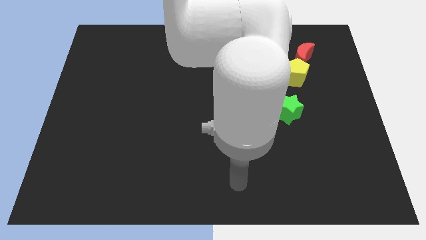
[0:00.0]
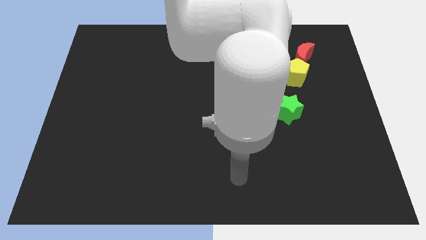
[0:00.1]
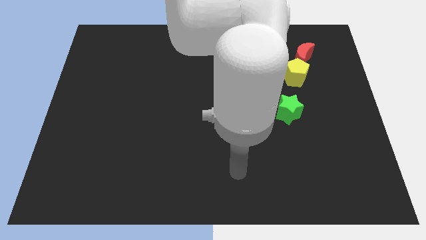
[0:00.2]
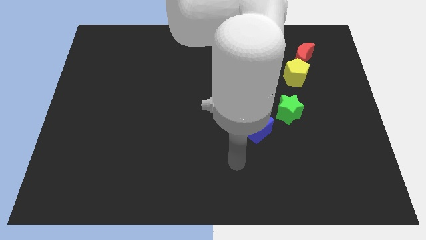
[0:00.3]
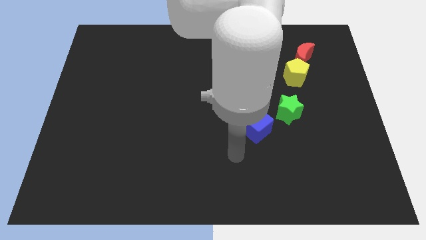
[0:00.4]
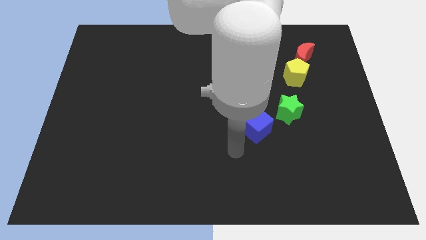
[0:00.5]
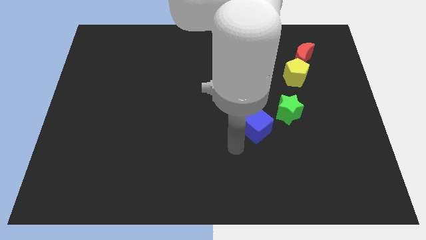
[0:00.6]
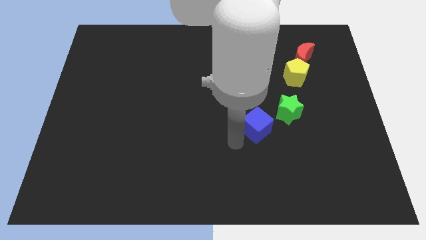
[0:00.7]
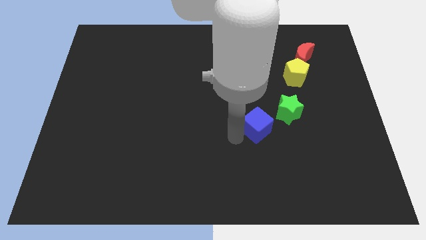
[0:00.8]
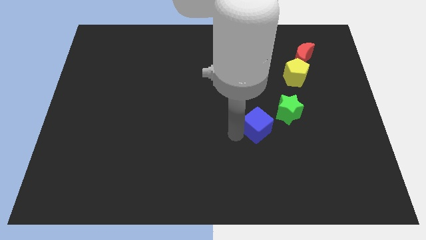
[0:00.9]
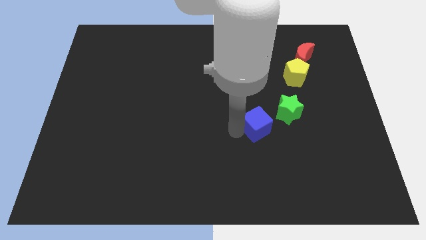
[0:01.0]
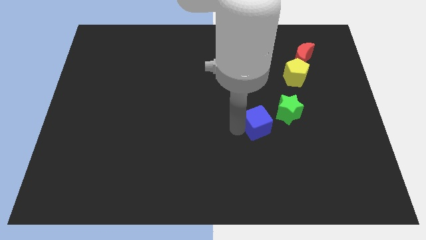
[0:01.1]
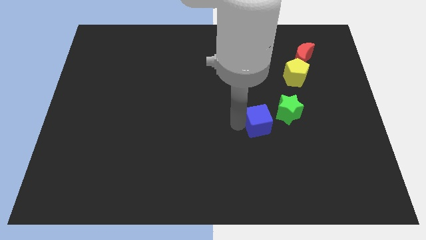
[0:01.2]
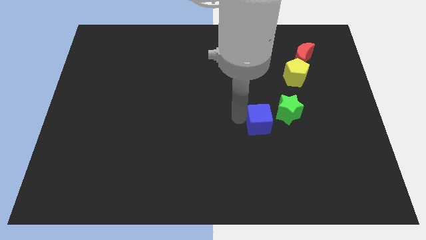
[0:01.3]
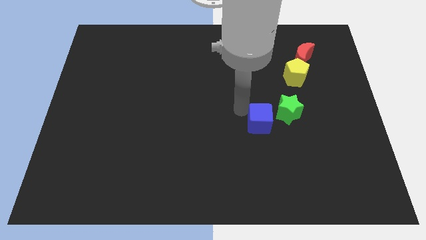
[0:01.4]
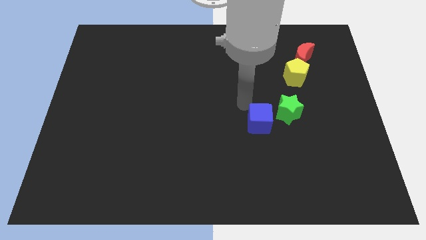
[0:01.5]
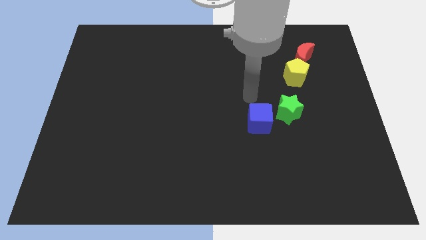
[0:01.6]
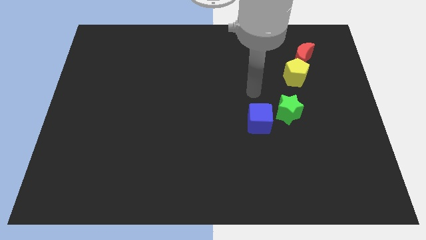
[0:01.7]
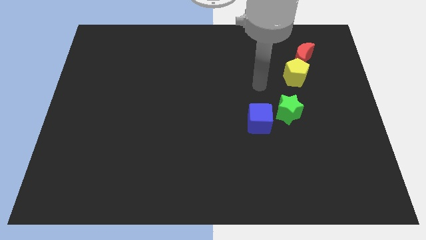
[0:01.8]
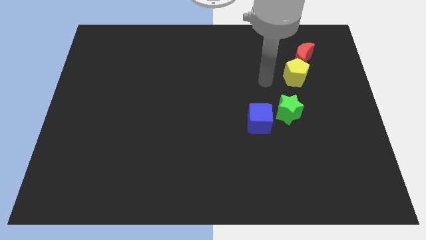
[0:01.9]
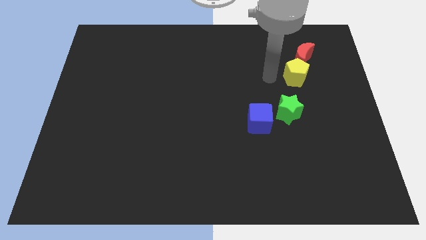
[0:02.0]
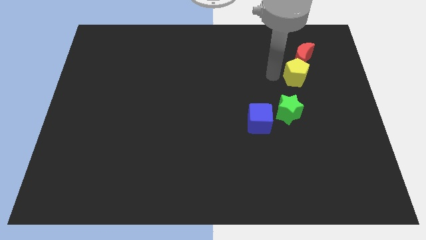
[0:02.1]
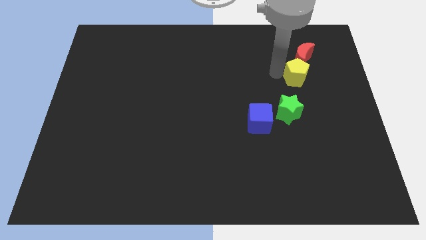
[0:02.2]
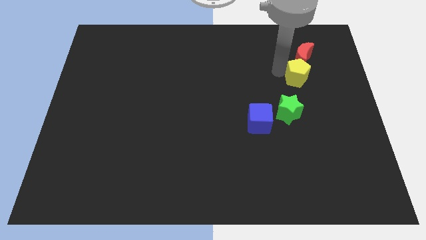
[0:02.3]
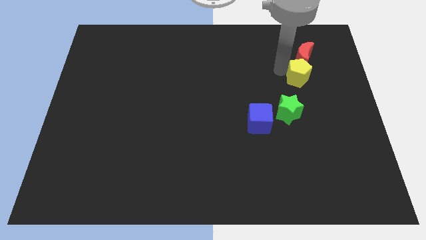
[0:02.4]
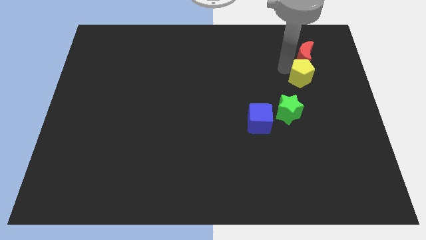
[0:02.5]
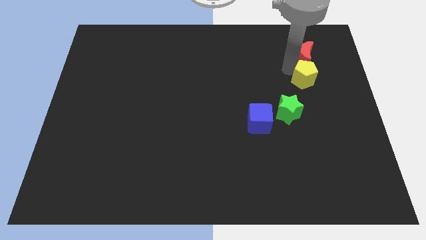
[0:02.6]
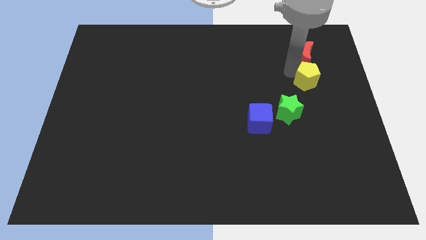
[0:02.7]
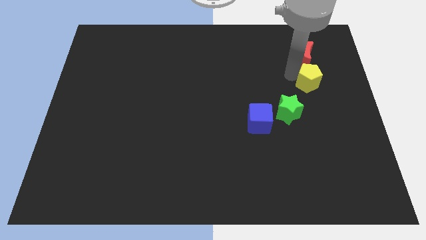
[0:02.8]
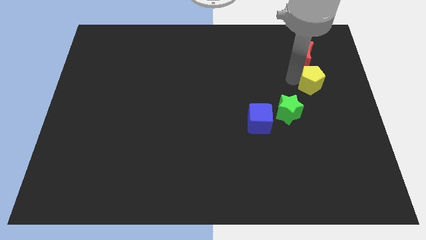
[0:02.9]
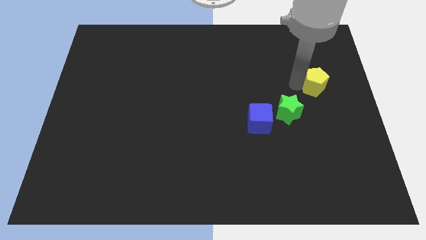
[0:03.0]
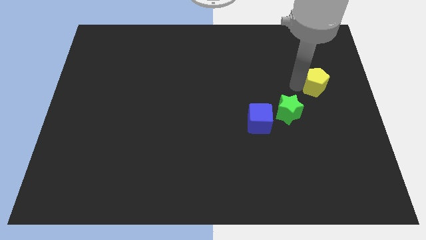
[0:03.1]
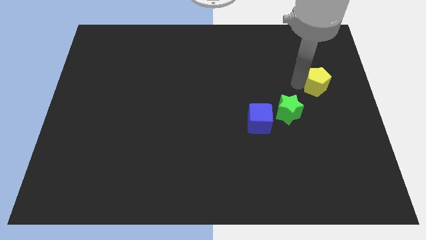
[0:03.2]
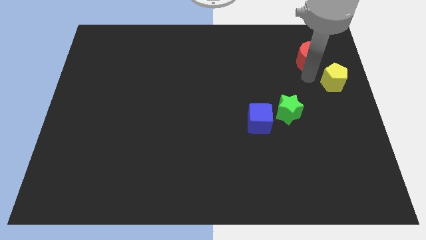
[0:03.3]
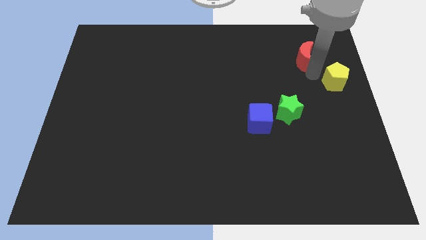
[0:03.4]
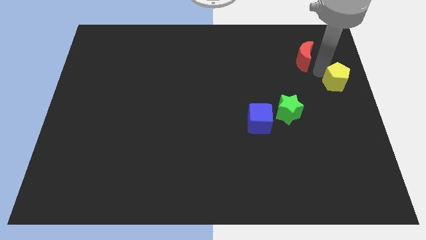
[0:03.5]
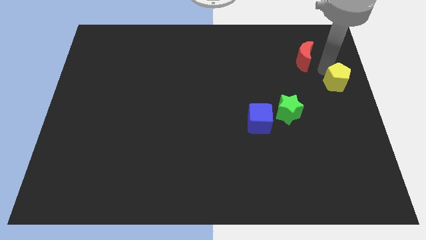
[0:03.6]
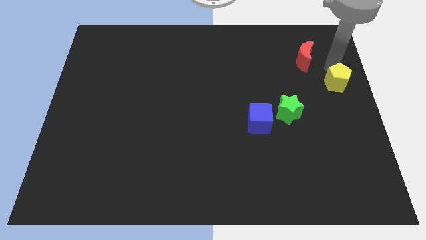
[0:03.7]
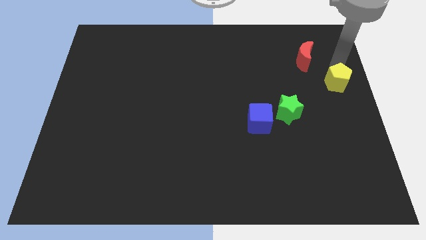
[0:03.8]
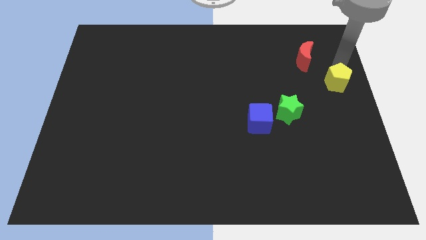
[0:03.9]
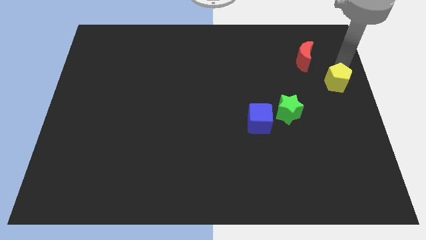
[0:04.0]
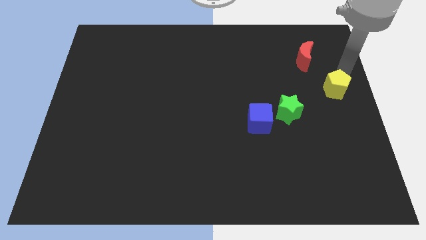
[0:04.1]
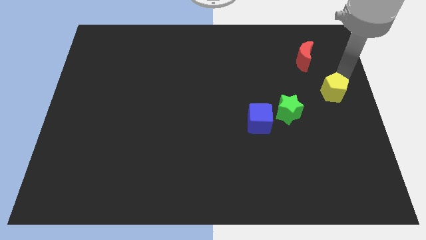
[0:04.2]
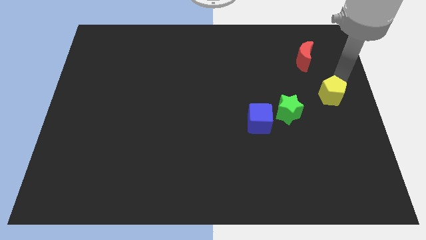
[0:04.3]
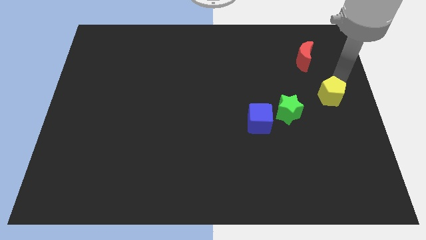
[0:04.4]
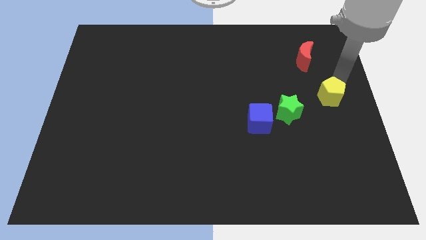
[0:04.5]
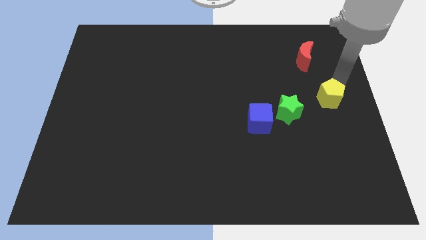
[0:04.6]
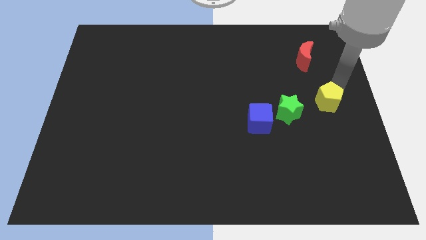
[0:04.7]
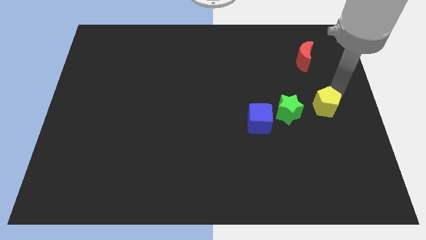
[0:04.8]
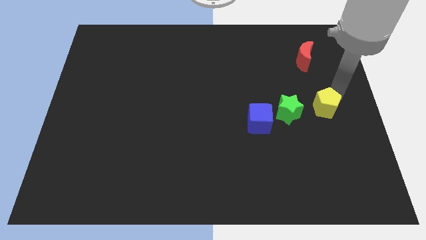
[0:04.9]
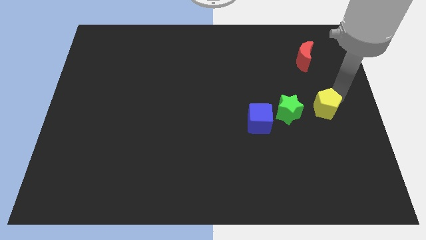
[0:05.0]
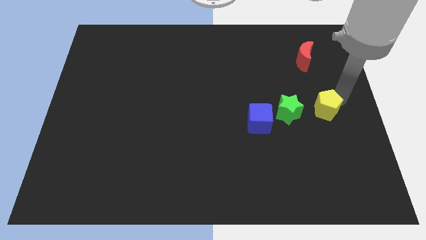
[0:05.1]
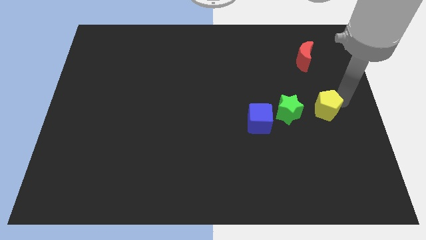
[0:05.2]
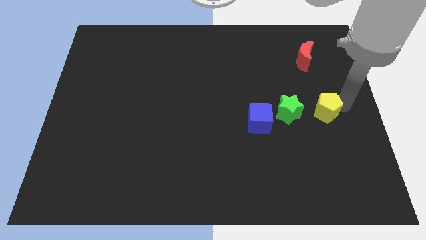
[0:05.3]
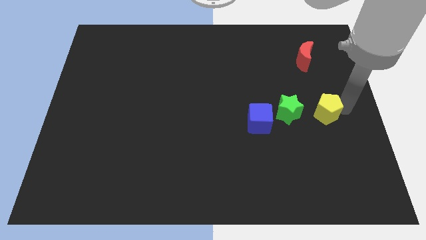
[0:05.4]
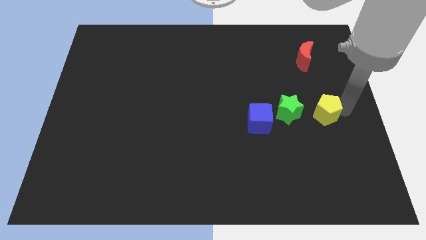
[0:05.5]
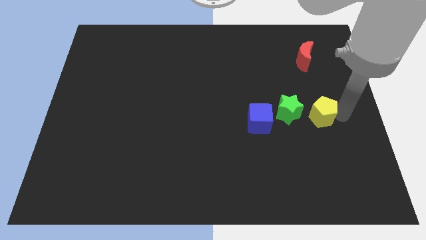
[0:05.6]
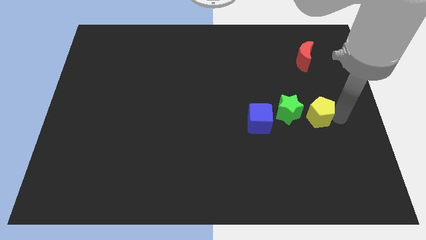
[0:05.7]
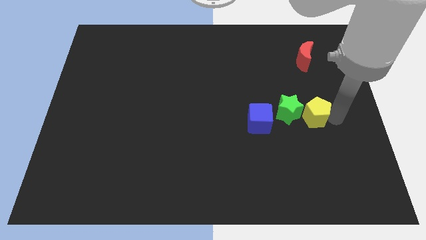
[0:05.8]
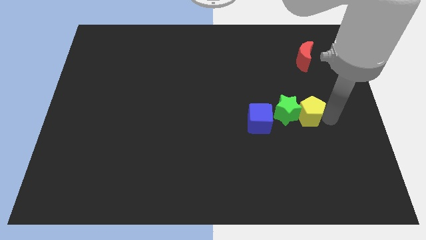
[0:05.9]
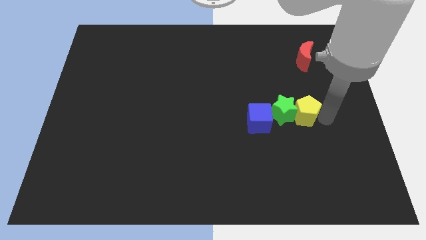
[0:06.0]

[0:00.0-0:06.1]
put the yellow pentagon next to the green block

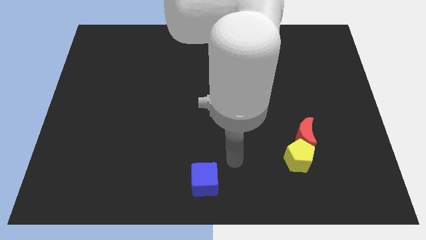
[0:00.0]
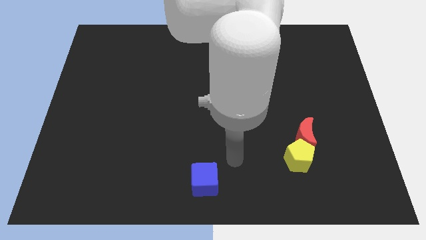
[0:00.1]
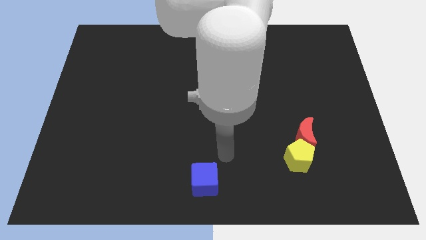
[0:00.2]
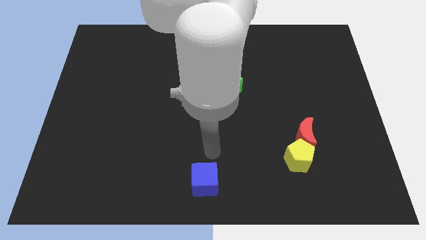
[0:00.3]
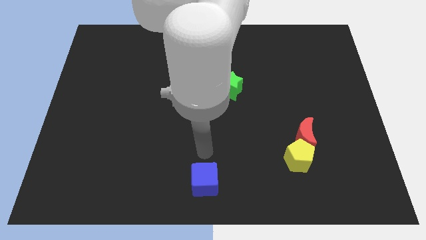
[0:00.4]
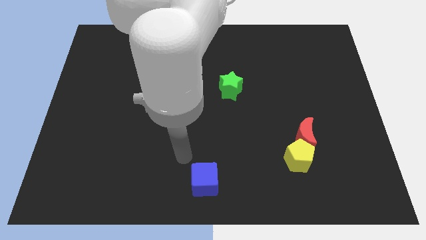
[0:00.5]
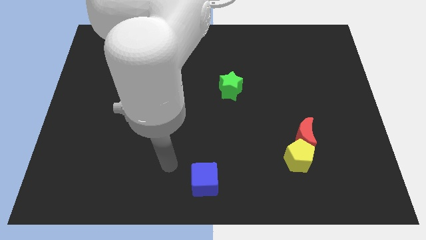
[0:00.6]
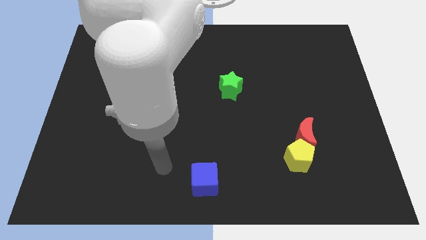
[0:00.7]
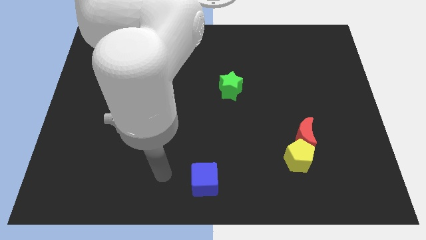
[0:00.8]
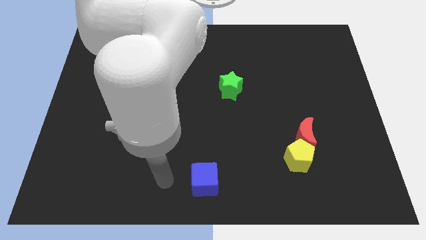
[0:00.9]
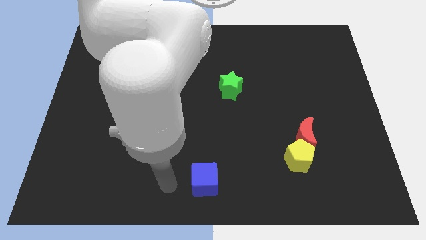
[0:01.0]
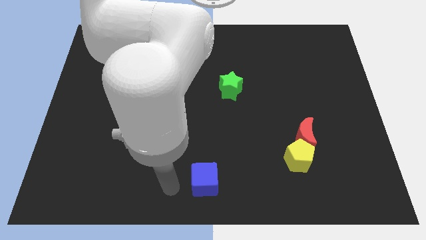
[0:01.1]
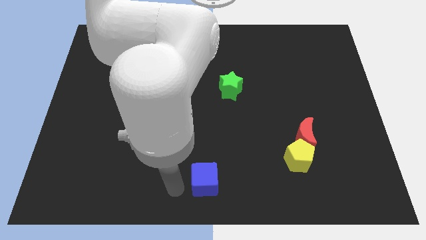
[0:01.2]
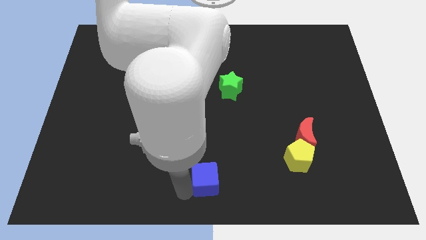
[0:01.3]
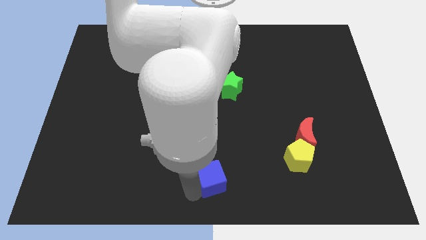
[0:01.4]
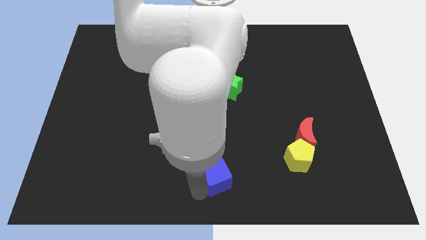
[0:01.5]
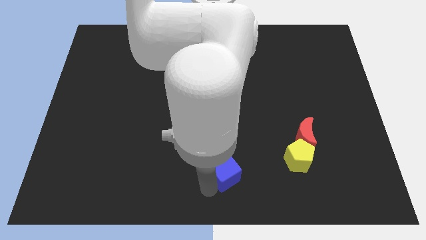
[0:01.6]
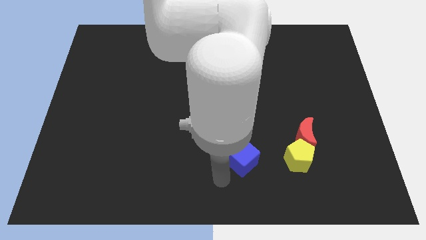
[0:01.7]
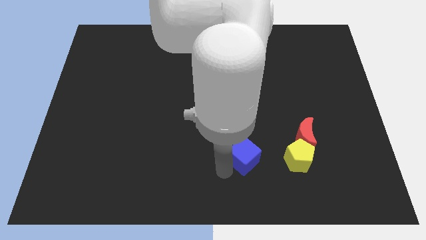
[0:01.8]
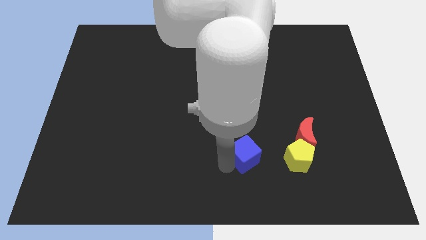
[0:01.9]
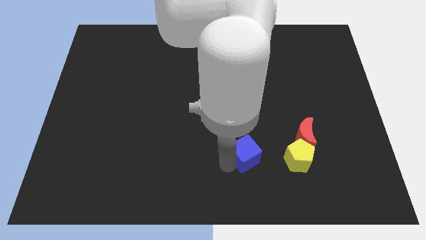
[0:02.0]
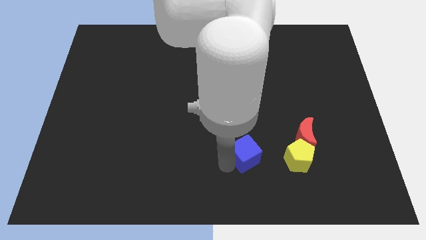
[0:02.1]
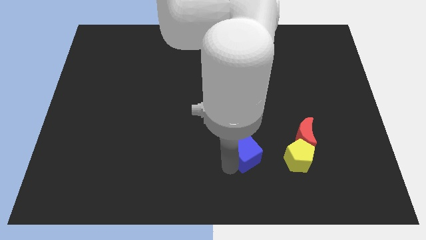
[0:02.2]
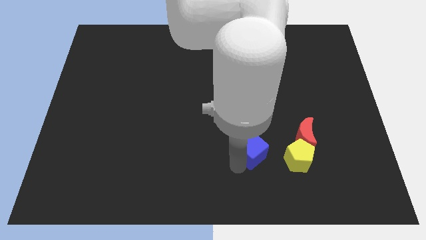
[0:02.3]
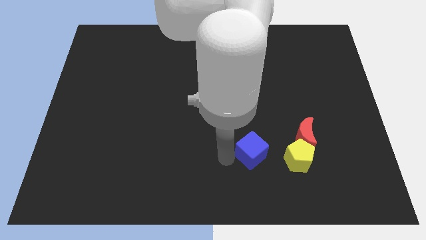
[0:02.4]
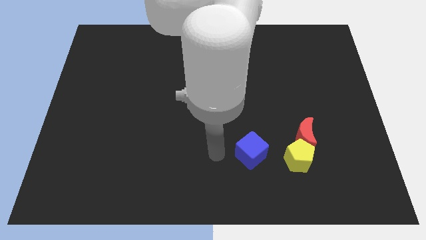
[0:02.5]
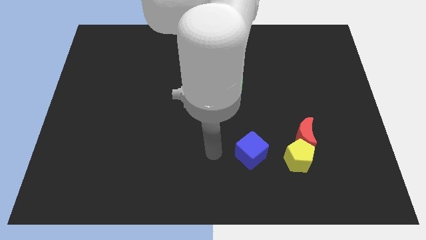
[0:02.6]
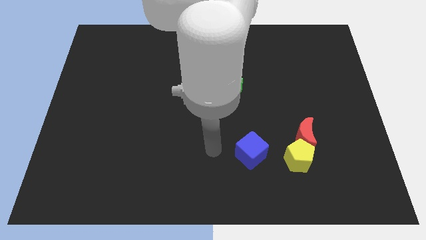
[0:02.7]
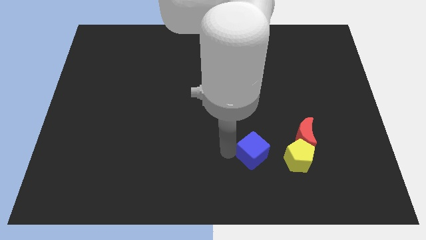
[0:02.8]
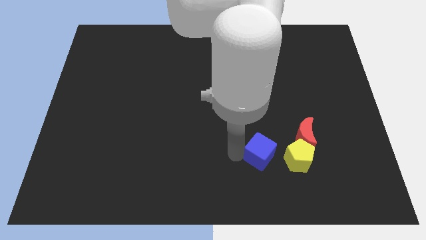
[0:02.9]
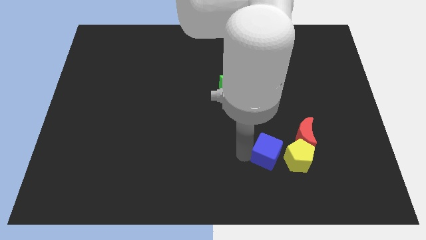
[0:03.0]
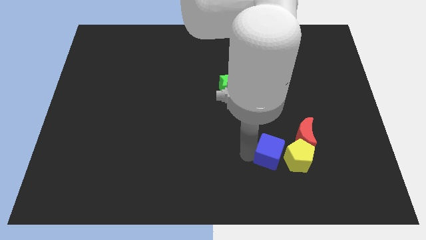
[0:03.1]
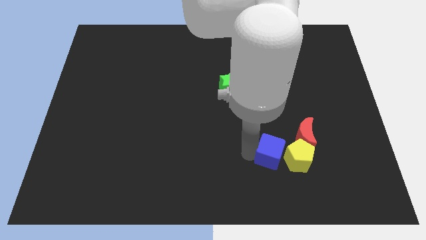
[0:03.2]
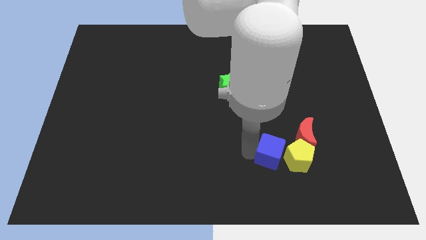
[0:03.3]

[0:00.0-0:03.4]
move the cube close to the yellow pentagon
